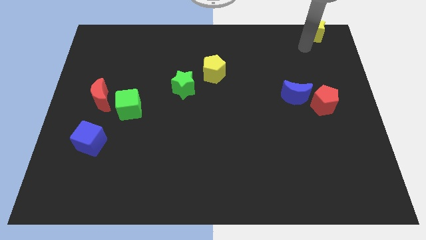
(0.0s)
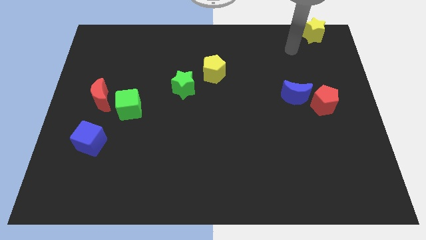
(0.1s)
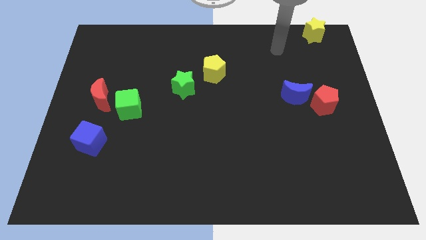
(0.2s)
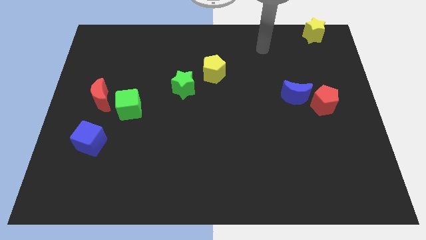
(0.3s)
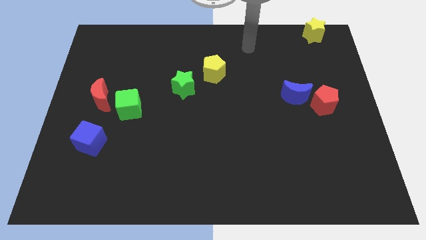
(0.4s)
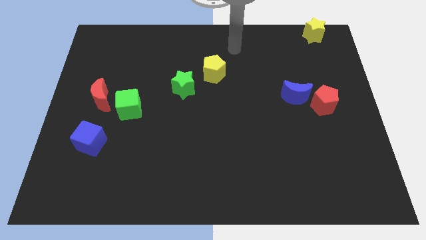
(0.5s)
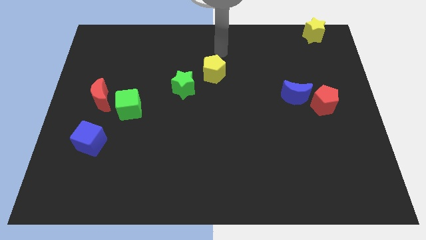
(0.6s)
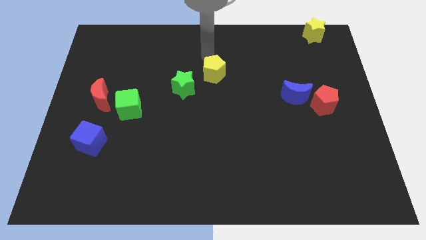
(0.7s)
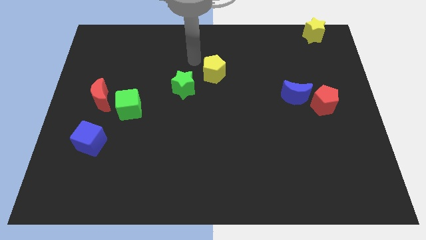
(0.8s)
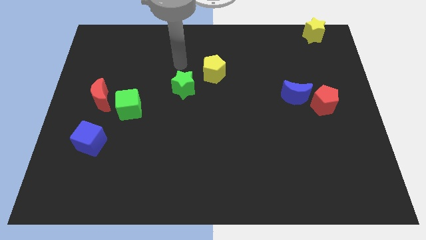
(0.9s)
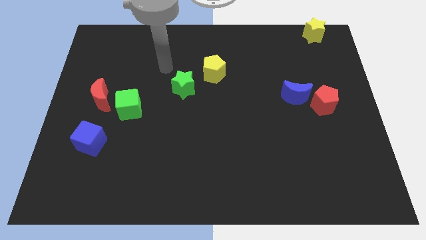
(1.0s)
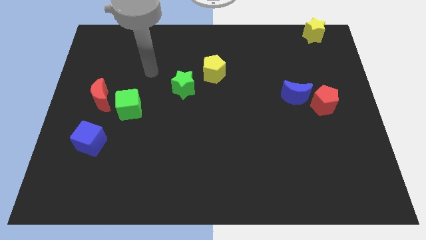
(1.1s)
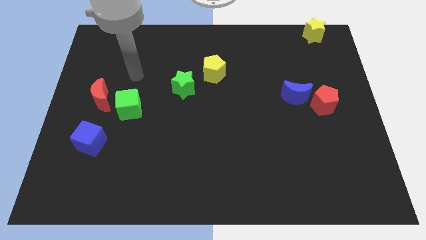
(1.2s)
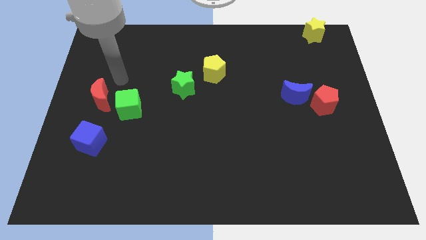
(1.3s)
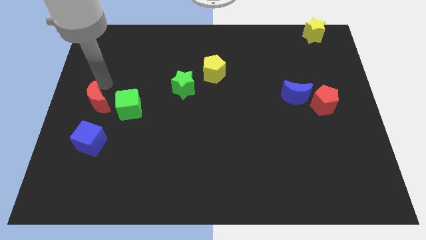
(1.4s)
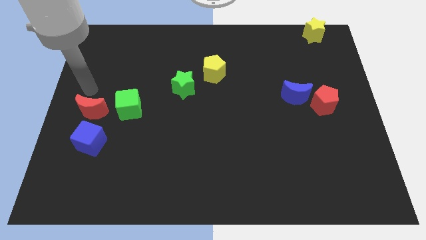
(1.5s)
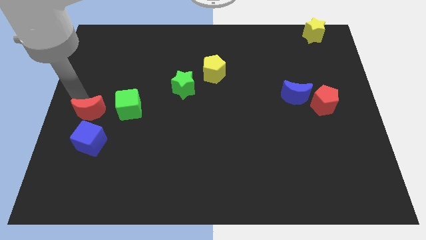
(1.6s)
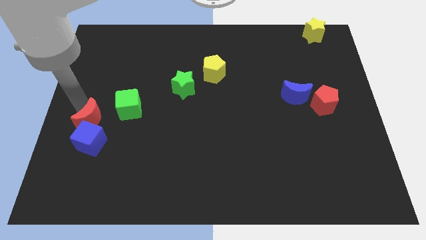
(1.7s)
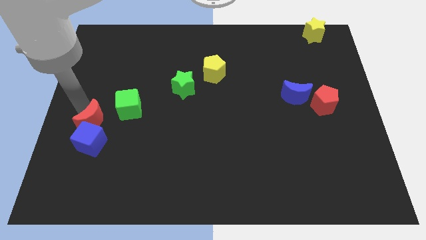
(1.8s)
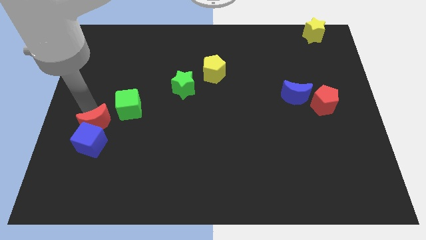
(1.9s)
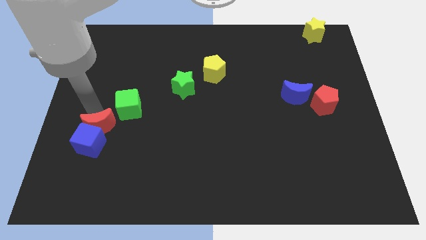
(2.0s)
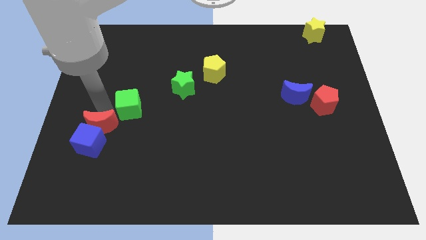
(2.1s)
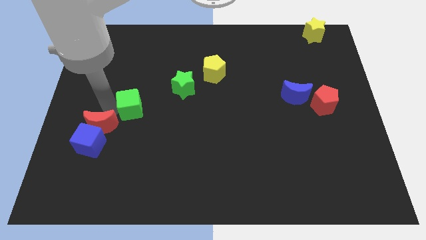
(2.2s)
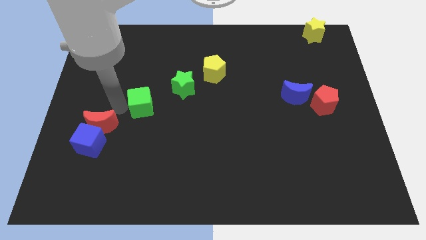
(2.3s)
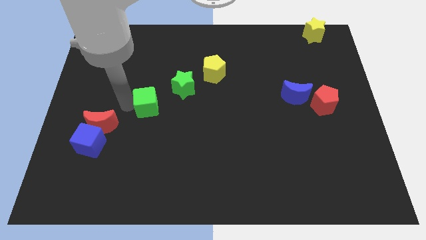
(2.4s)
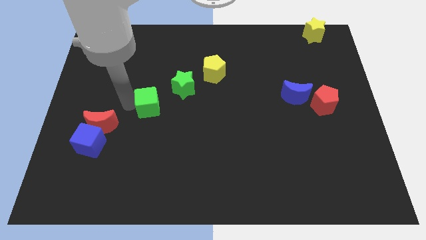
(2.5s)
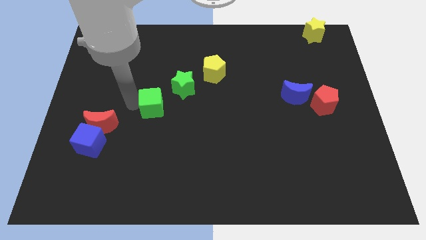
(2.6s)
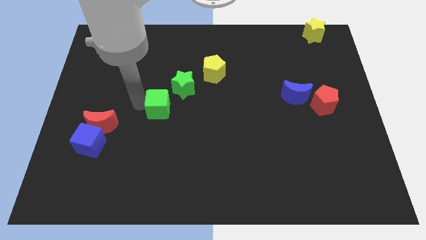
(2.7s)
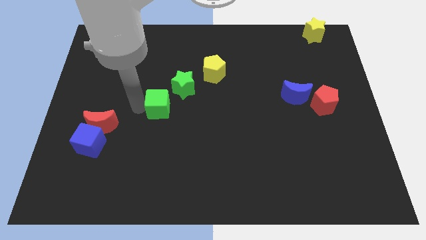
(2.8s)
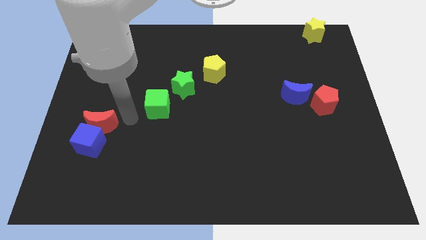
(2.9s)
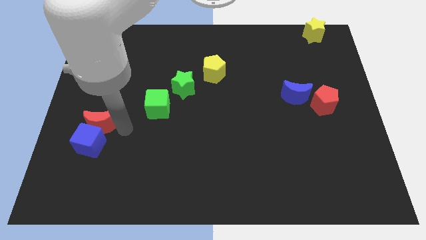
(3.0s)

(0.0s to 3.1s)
make the red crescent to touch the top side of the blue cube

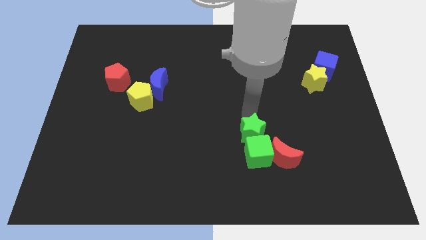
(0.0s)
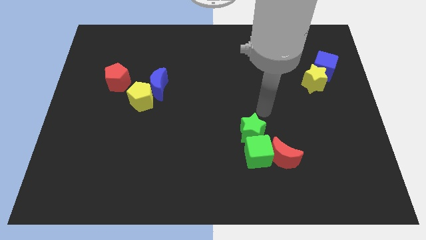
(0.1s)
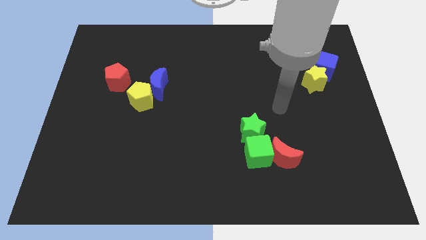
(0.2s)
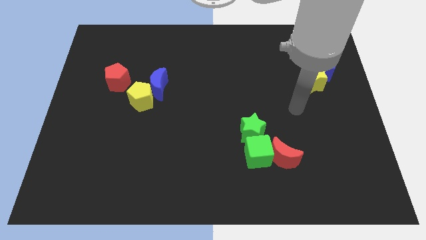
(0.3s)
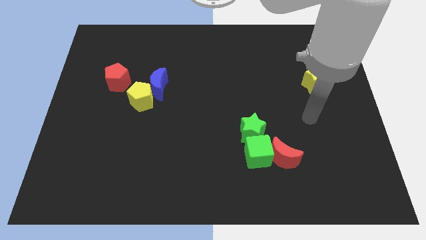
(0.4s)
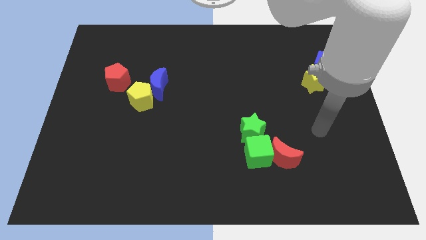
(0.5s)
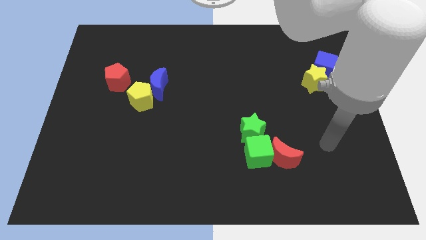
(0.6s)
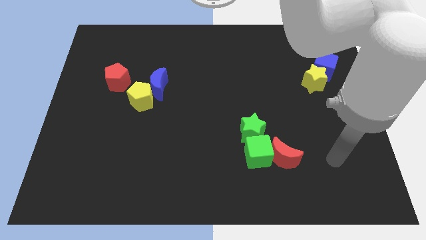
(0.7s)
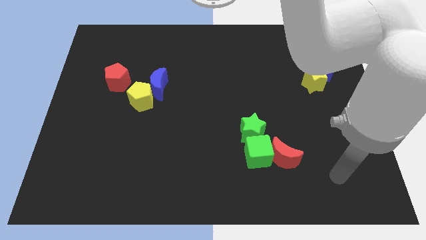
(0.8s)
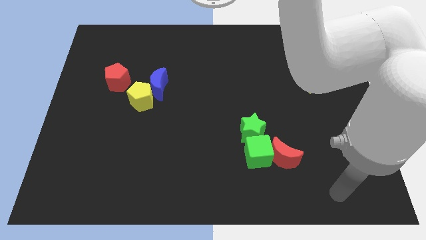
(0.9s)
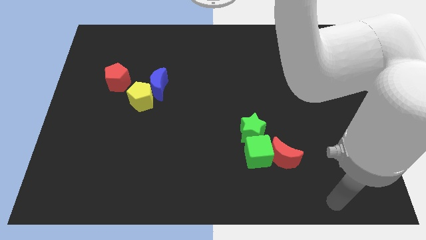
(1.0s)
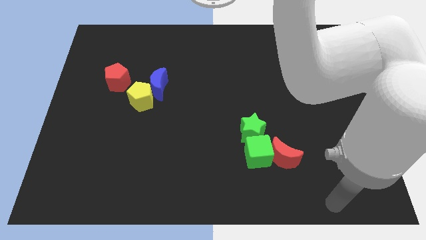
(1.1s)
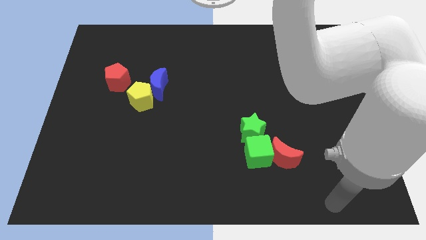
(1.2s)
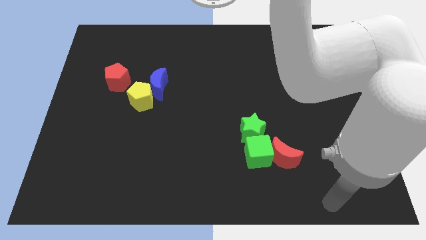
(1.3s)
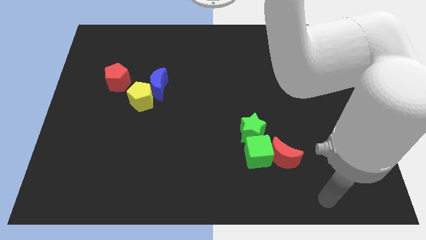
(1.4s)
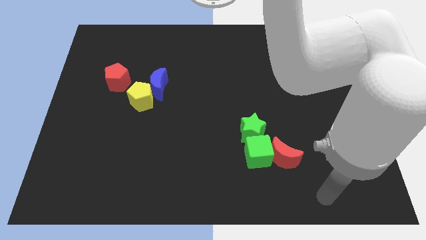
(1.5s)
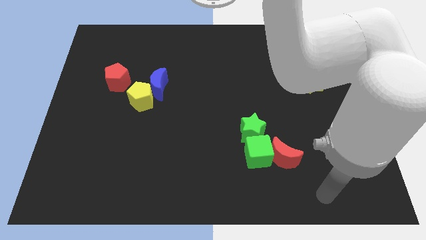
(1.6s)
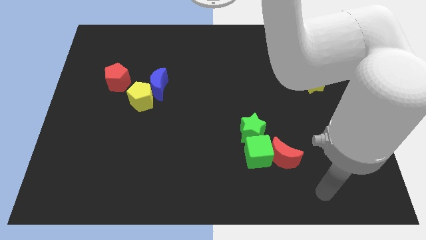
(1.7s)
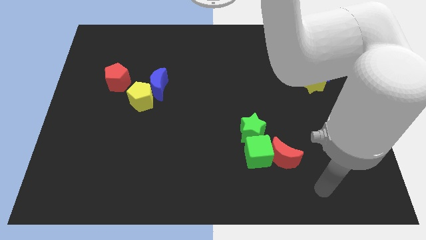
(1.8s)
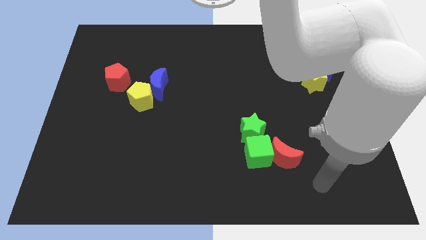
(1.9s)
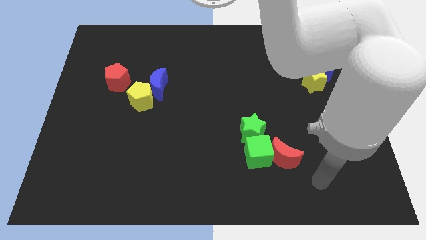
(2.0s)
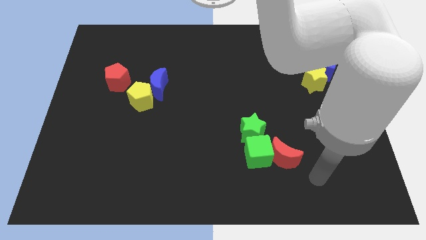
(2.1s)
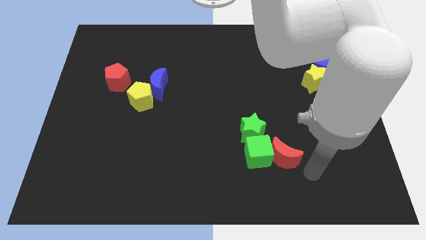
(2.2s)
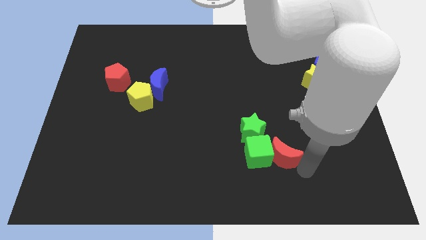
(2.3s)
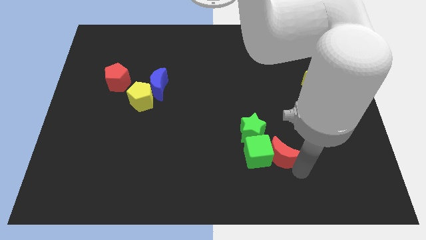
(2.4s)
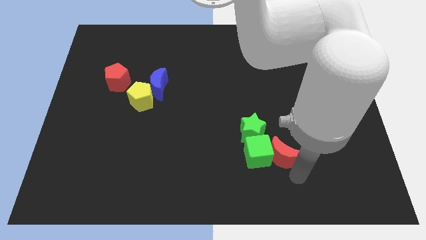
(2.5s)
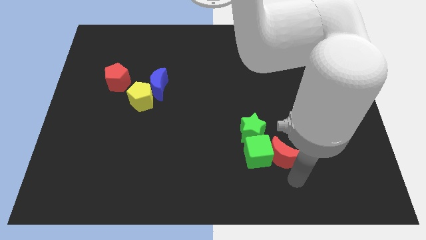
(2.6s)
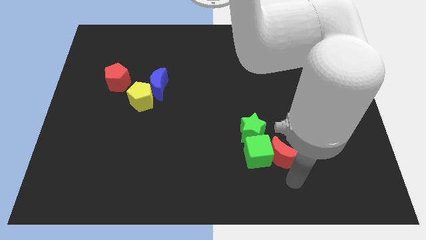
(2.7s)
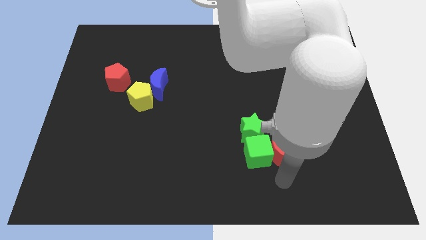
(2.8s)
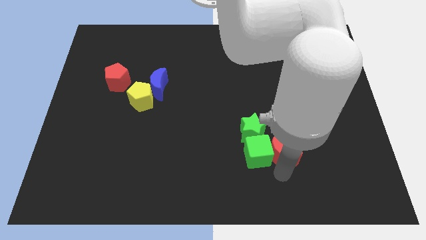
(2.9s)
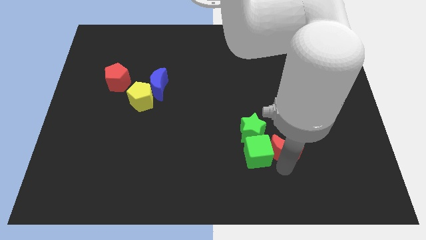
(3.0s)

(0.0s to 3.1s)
go and tap the bottom side of the red crescent

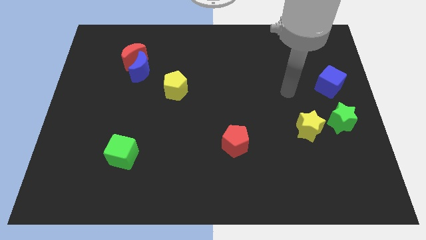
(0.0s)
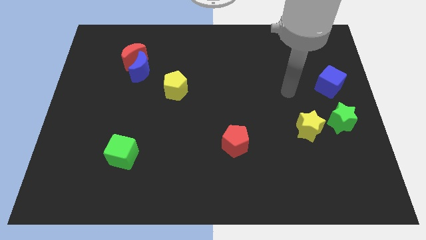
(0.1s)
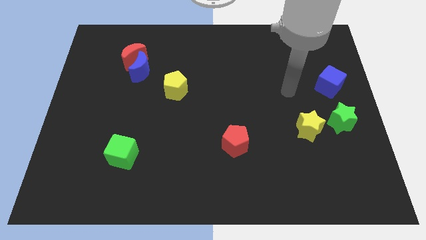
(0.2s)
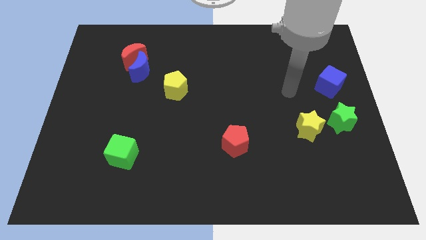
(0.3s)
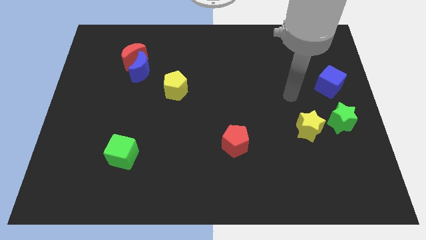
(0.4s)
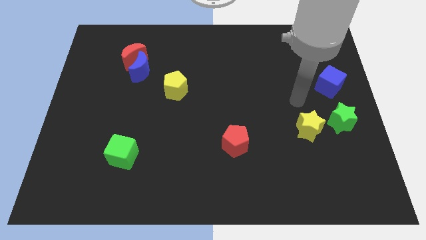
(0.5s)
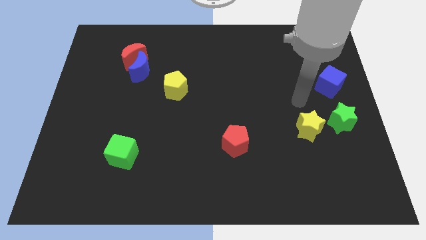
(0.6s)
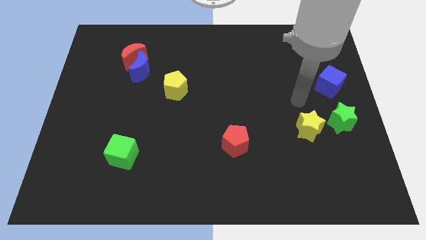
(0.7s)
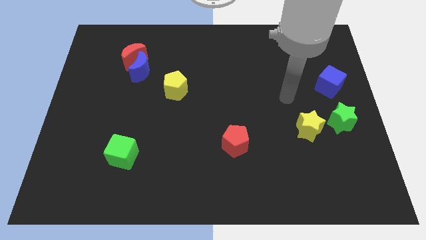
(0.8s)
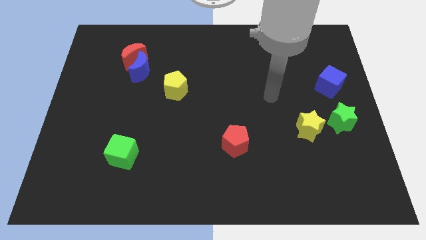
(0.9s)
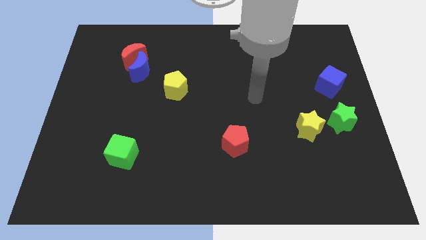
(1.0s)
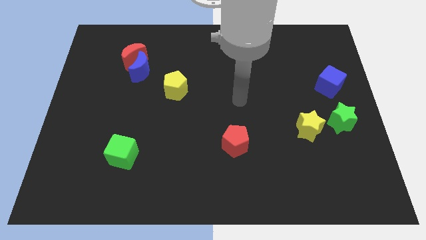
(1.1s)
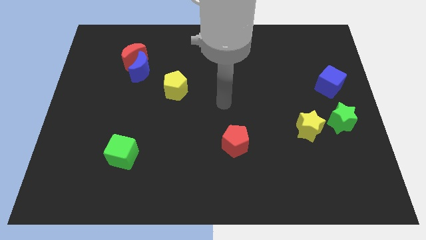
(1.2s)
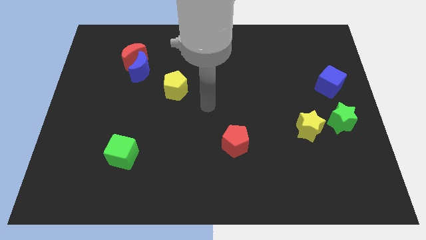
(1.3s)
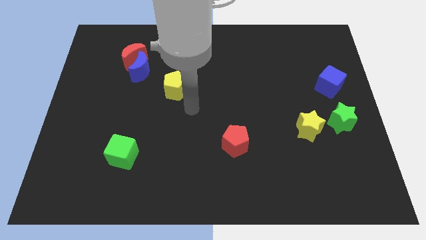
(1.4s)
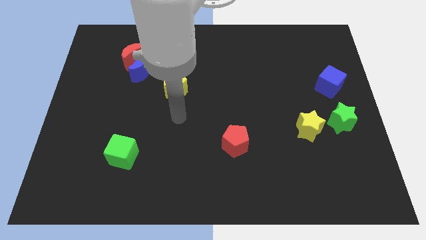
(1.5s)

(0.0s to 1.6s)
point your hand at the bottom side of the yellow pentagon

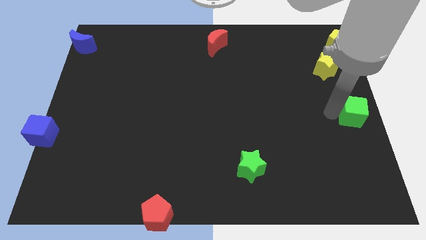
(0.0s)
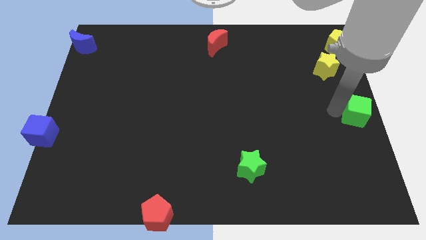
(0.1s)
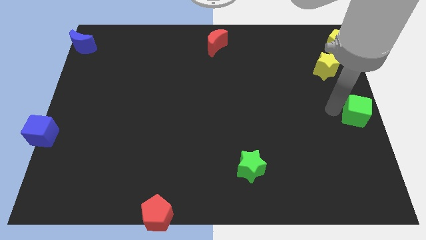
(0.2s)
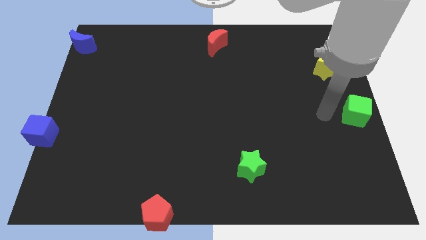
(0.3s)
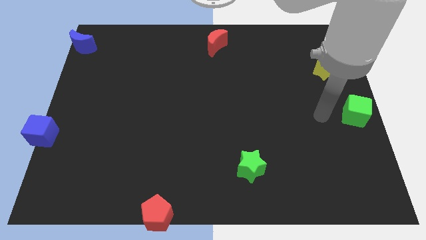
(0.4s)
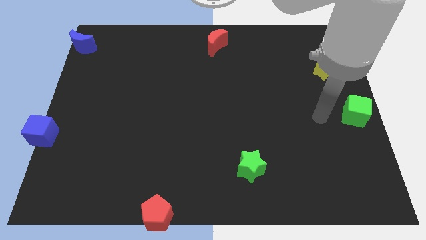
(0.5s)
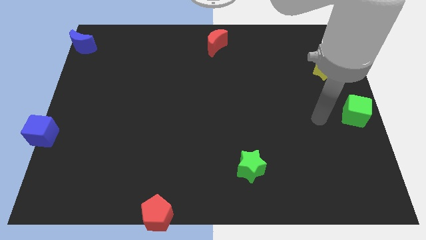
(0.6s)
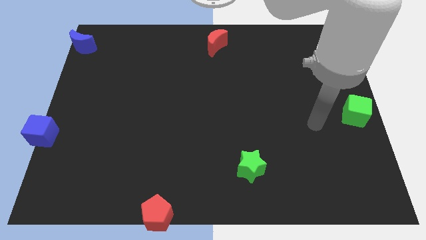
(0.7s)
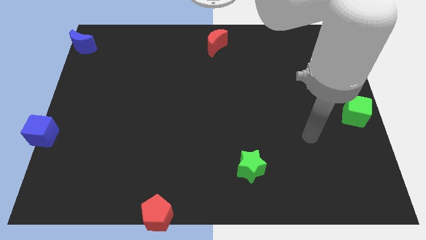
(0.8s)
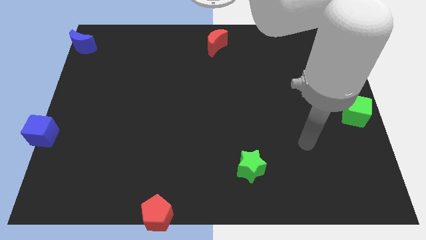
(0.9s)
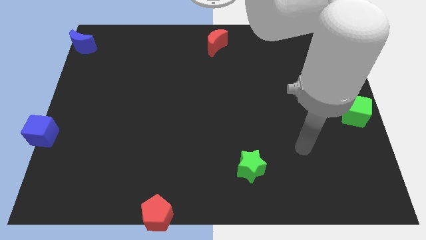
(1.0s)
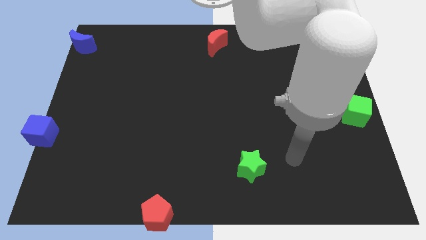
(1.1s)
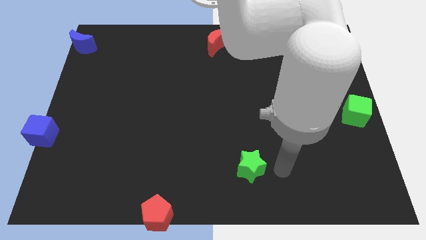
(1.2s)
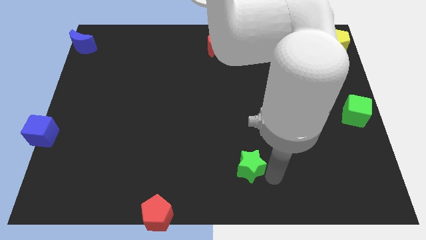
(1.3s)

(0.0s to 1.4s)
place the green cube at the center of the baord

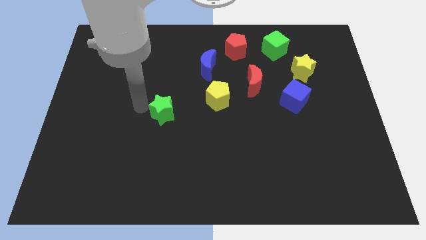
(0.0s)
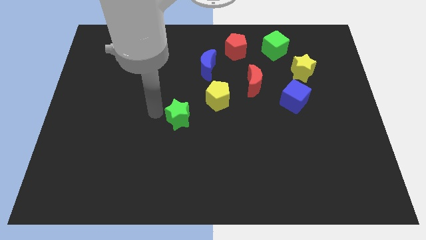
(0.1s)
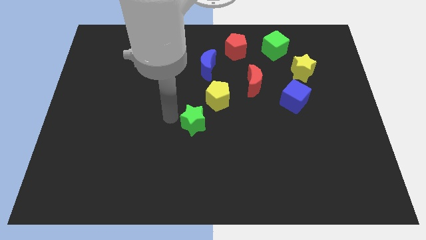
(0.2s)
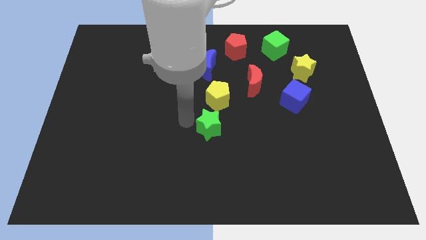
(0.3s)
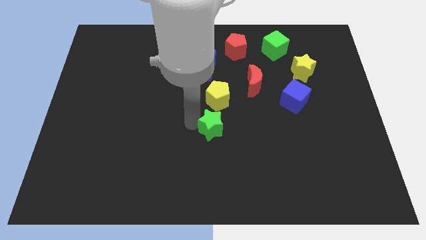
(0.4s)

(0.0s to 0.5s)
move the green star below to the yellow pentagon
